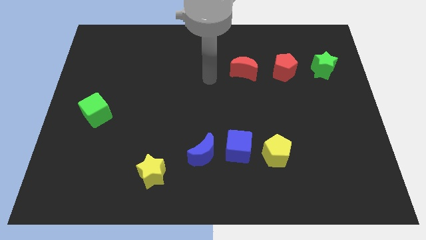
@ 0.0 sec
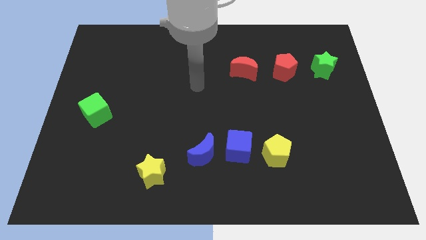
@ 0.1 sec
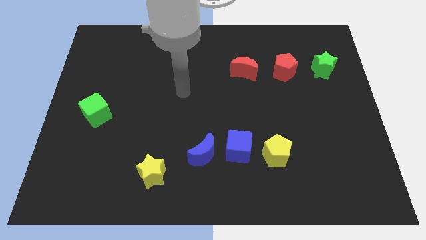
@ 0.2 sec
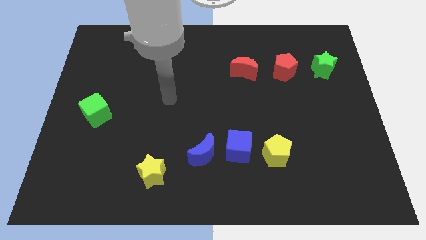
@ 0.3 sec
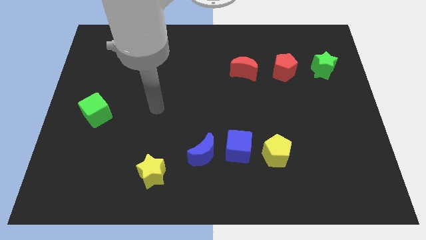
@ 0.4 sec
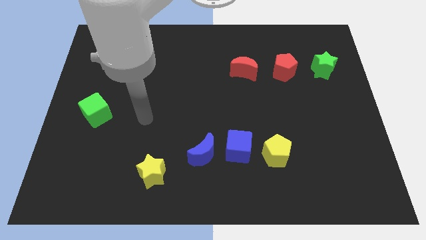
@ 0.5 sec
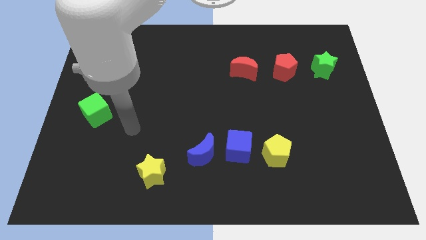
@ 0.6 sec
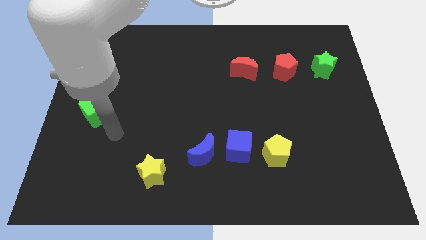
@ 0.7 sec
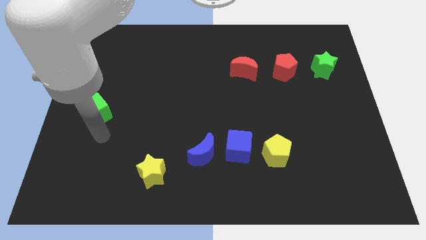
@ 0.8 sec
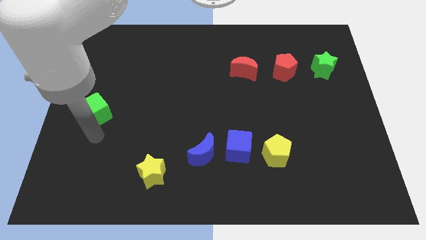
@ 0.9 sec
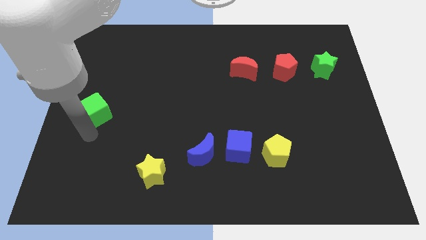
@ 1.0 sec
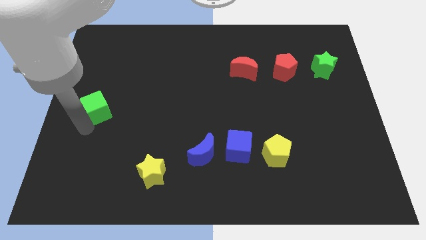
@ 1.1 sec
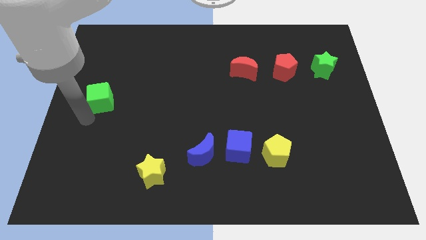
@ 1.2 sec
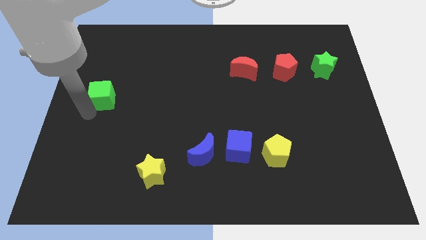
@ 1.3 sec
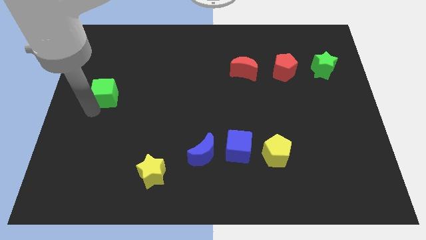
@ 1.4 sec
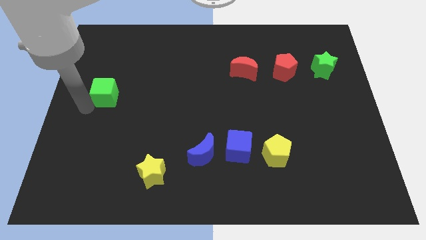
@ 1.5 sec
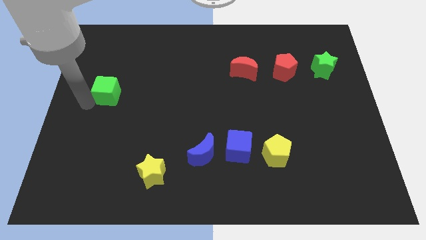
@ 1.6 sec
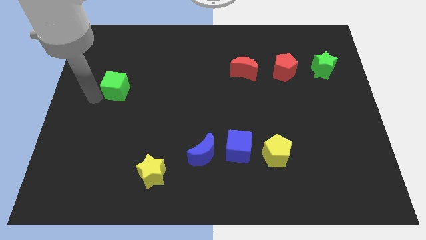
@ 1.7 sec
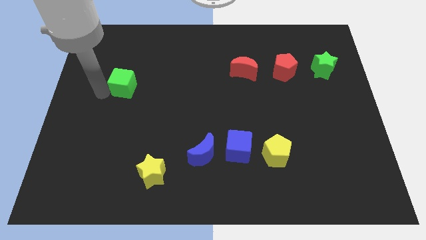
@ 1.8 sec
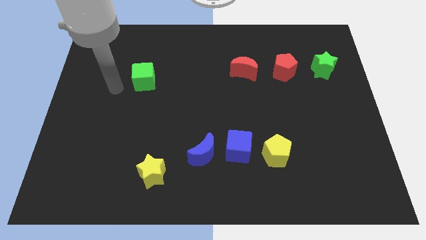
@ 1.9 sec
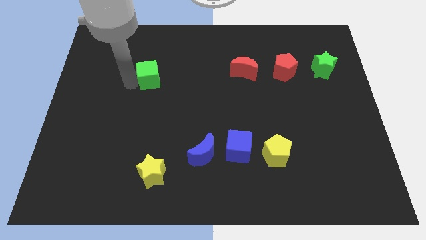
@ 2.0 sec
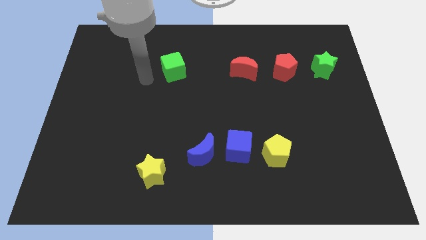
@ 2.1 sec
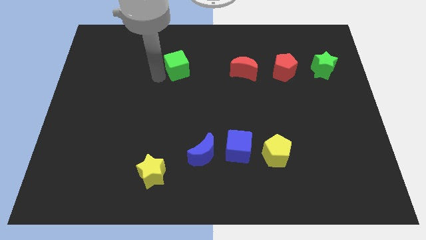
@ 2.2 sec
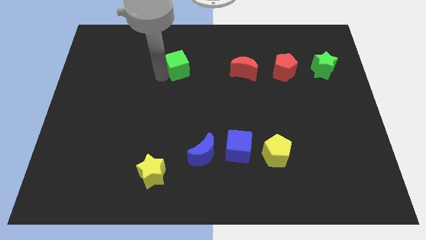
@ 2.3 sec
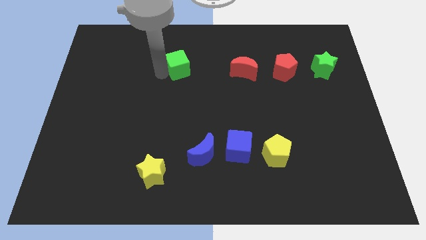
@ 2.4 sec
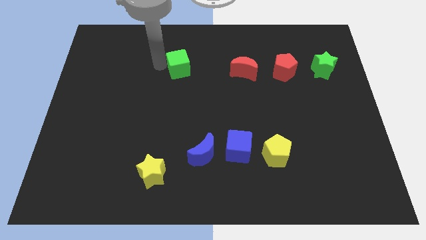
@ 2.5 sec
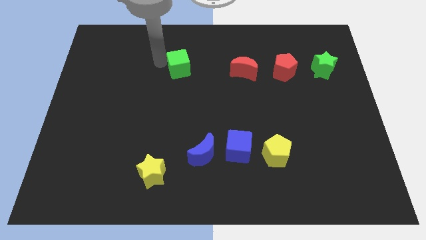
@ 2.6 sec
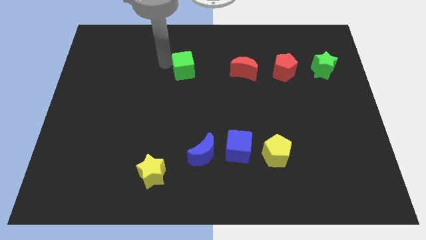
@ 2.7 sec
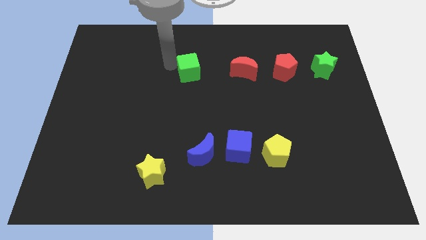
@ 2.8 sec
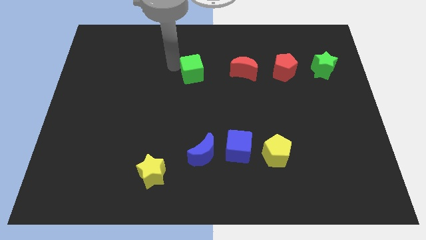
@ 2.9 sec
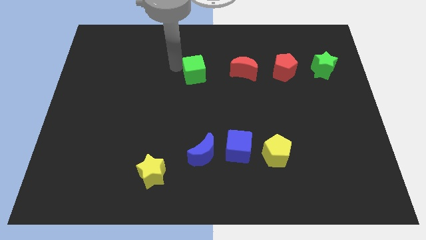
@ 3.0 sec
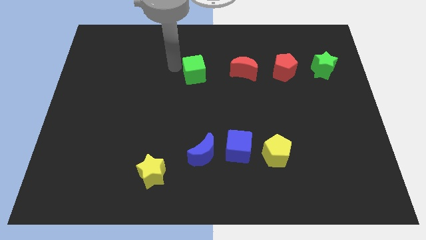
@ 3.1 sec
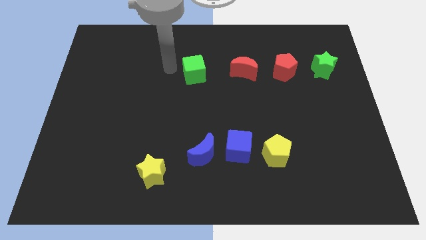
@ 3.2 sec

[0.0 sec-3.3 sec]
move the green cube to the left of the red moon

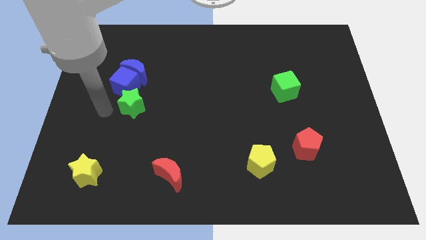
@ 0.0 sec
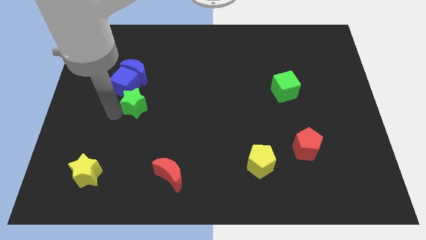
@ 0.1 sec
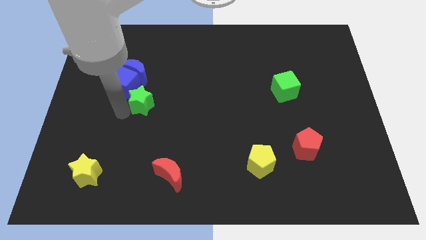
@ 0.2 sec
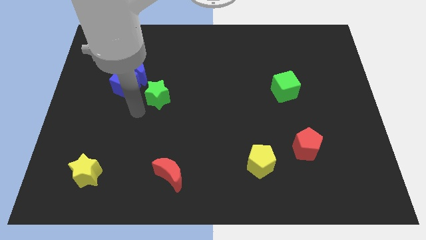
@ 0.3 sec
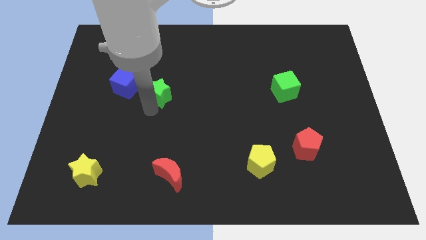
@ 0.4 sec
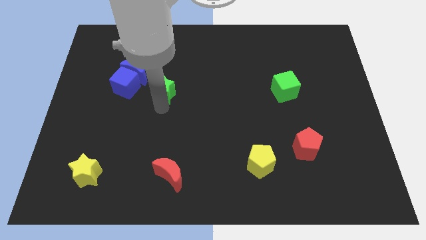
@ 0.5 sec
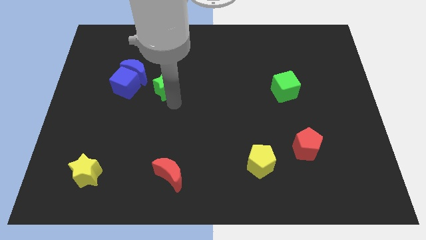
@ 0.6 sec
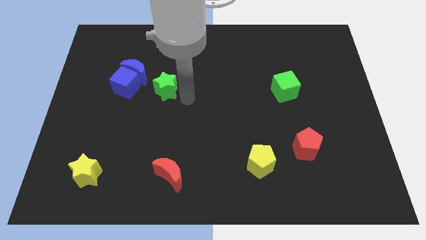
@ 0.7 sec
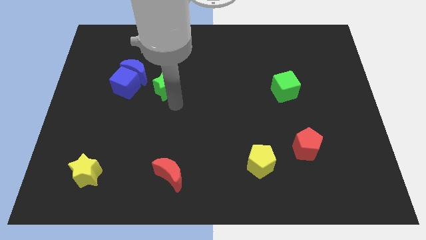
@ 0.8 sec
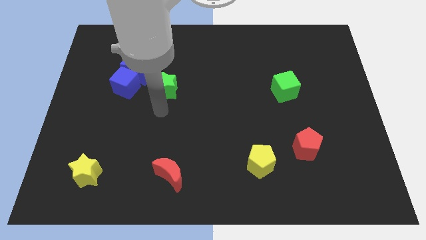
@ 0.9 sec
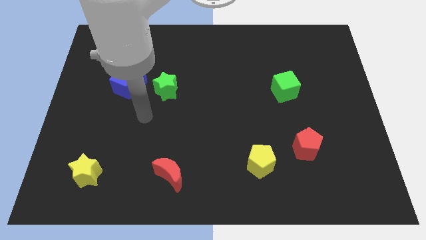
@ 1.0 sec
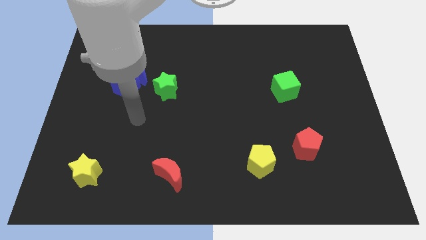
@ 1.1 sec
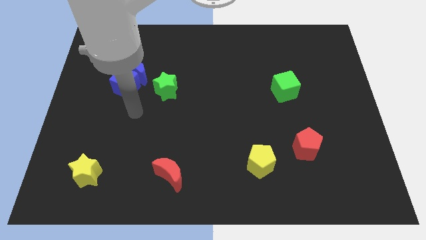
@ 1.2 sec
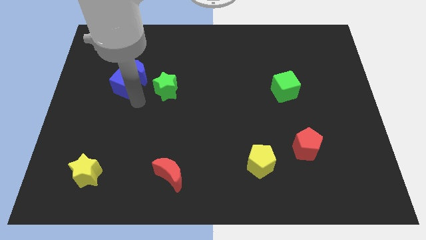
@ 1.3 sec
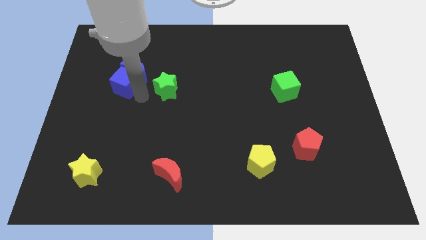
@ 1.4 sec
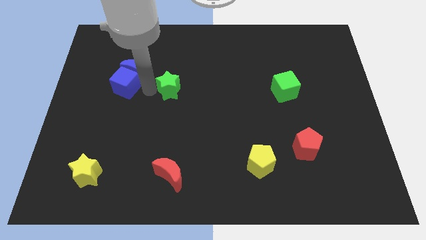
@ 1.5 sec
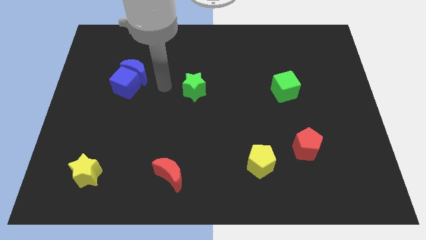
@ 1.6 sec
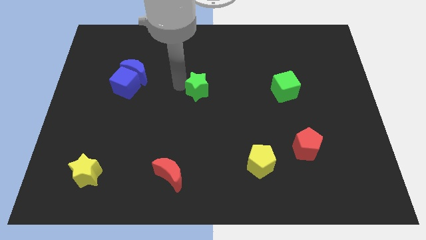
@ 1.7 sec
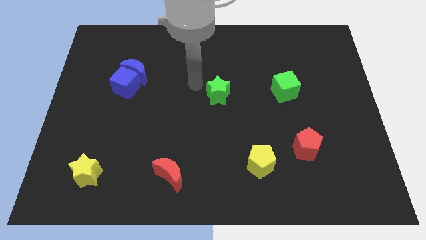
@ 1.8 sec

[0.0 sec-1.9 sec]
place the green star at the center of the board

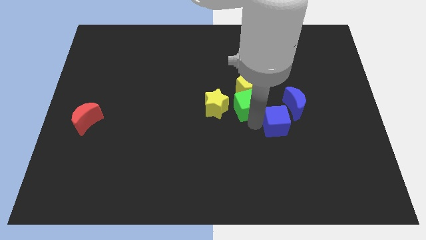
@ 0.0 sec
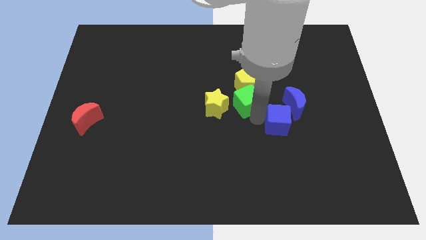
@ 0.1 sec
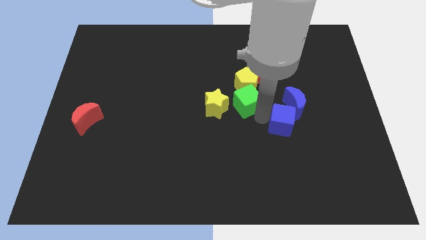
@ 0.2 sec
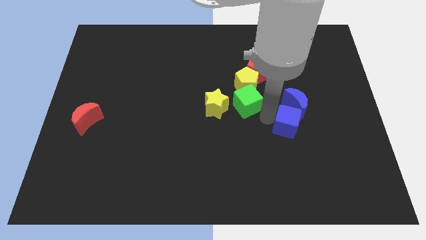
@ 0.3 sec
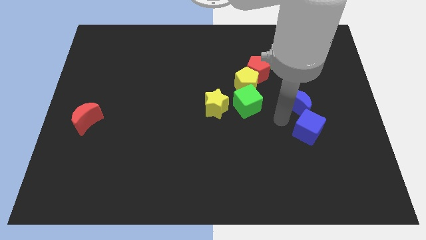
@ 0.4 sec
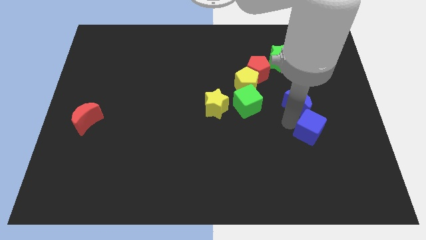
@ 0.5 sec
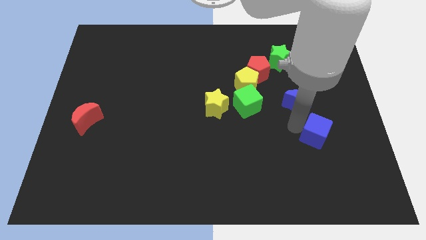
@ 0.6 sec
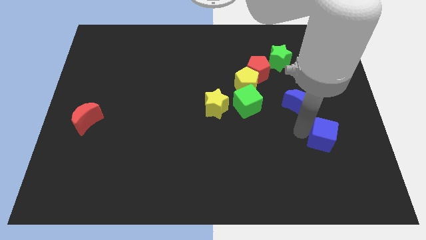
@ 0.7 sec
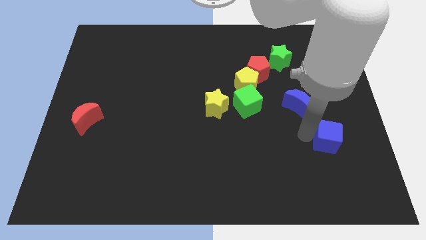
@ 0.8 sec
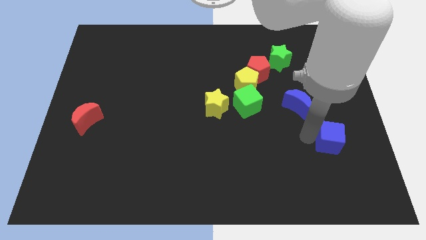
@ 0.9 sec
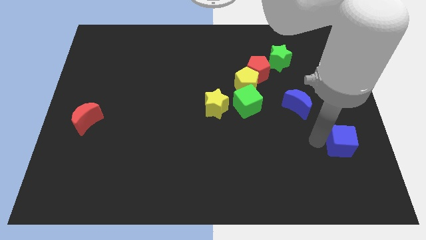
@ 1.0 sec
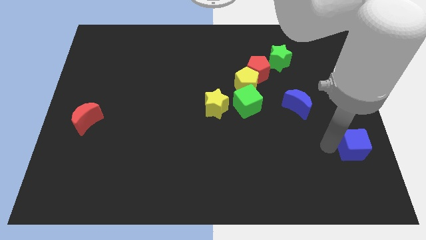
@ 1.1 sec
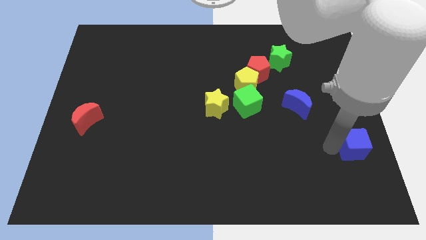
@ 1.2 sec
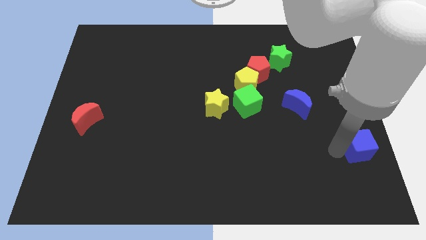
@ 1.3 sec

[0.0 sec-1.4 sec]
separate blue cube from blue moon

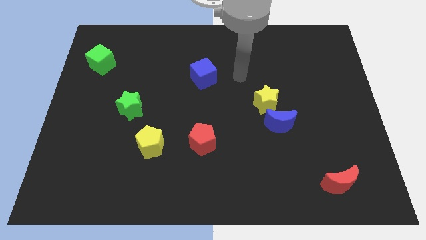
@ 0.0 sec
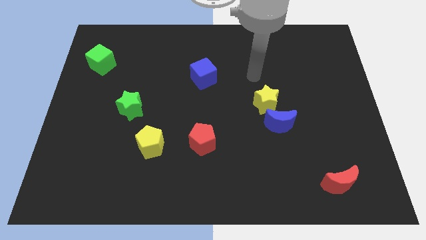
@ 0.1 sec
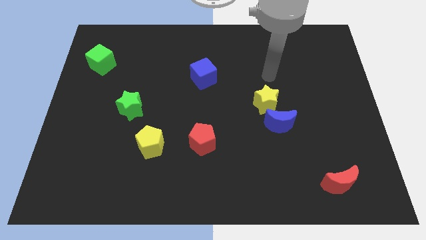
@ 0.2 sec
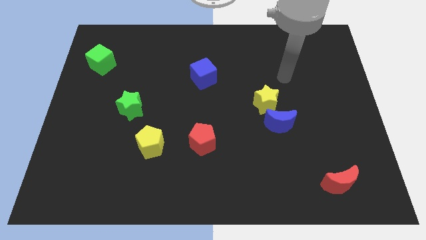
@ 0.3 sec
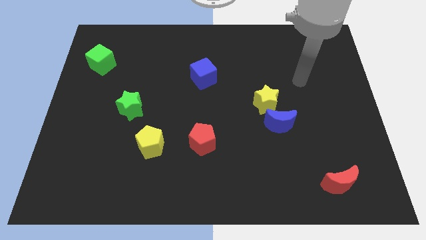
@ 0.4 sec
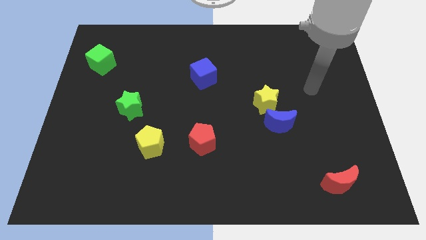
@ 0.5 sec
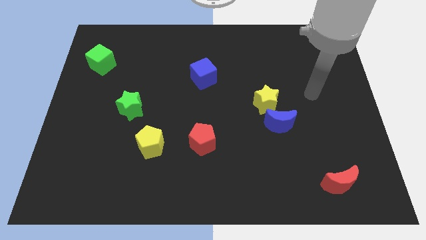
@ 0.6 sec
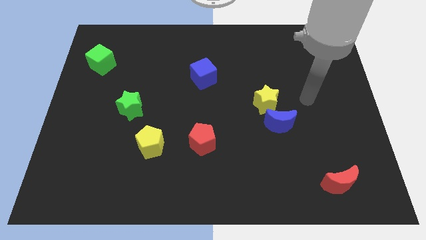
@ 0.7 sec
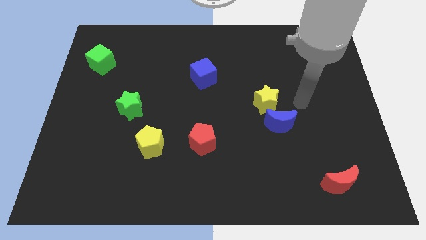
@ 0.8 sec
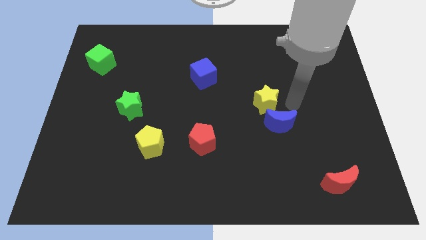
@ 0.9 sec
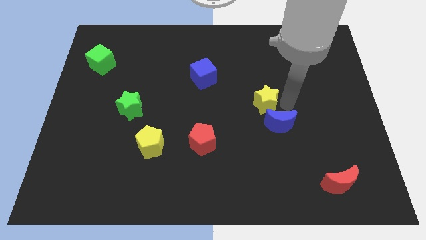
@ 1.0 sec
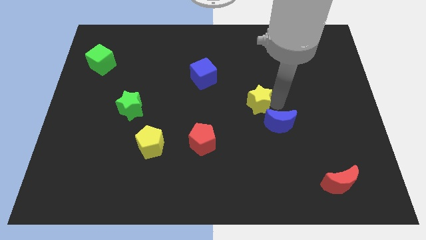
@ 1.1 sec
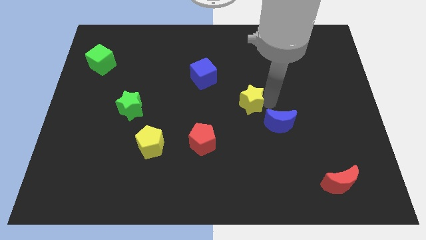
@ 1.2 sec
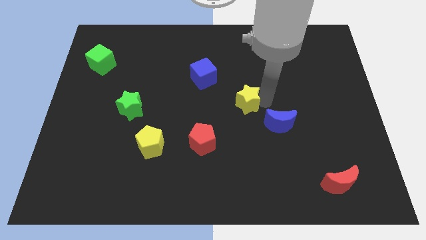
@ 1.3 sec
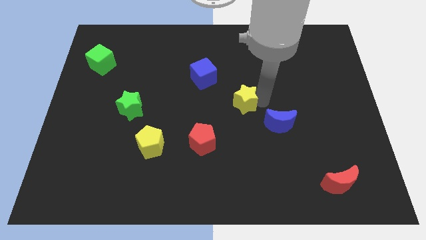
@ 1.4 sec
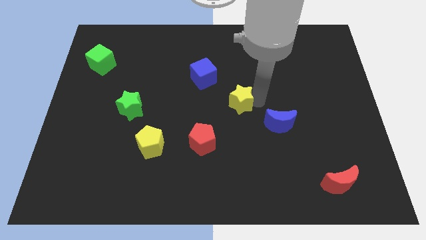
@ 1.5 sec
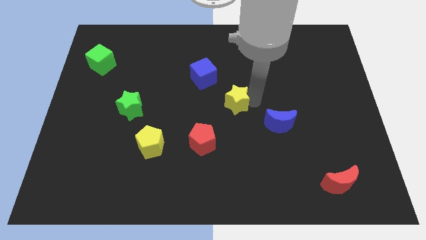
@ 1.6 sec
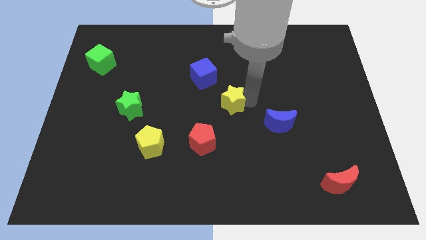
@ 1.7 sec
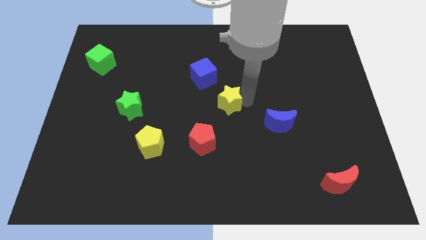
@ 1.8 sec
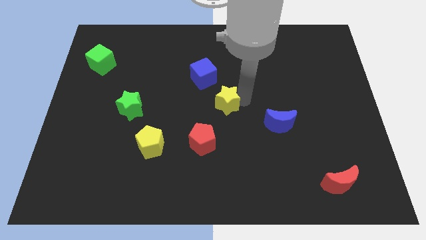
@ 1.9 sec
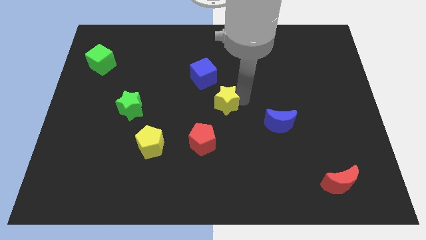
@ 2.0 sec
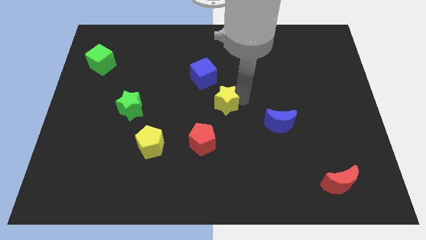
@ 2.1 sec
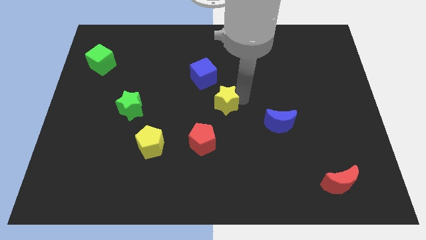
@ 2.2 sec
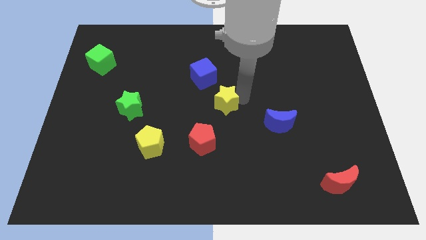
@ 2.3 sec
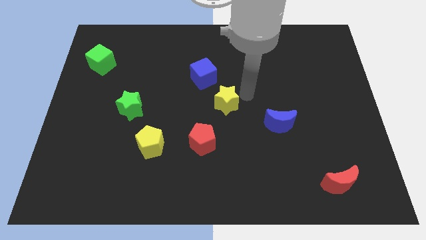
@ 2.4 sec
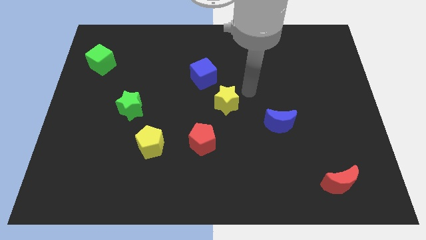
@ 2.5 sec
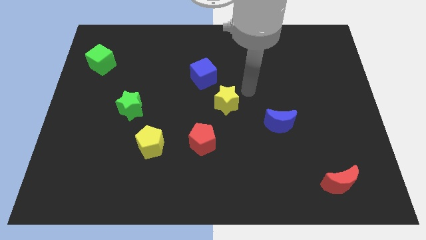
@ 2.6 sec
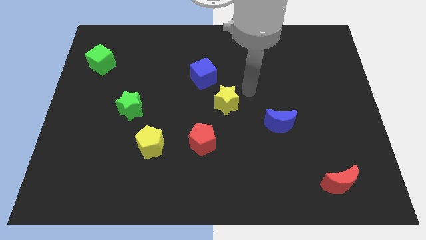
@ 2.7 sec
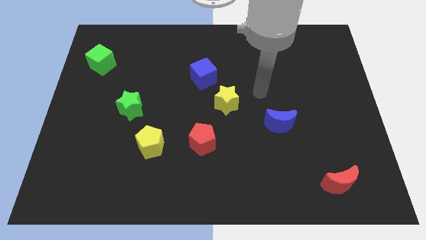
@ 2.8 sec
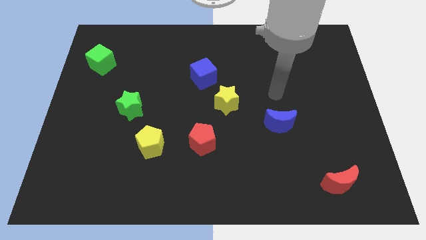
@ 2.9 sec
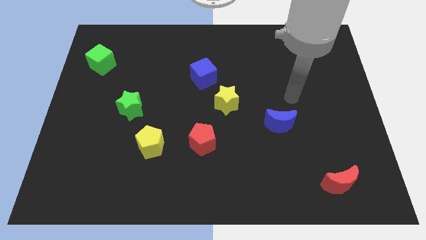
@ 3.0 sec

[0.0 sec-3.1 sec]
push the yellow star towards the center
